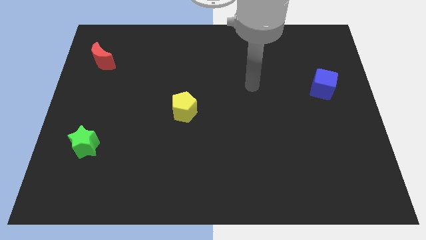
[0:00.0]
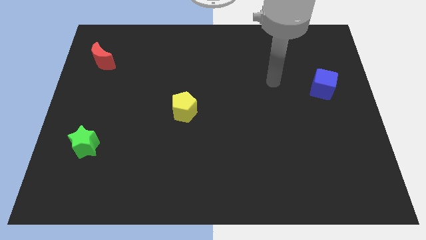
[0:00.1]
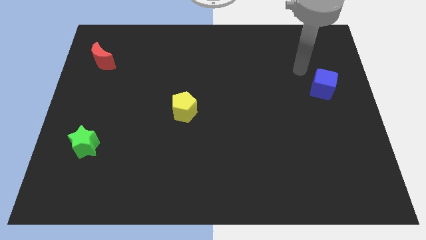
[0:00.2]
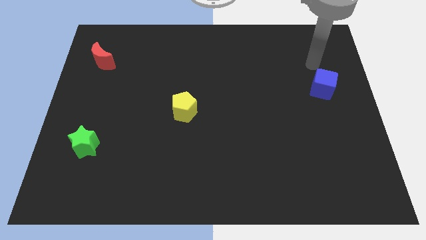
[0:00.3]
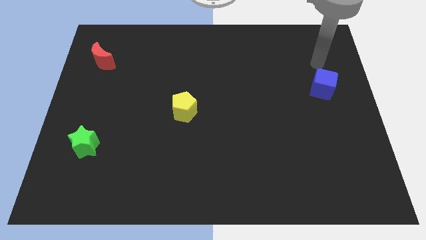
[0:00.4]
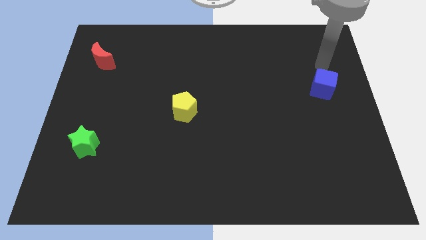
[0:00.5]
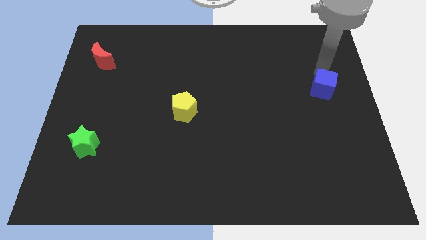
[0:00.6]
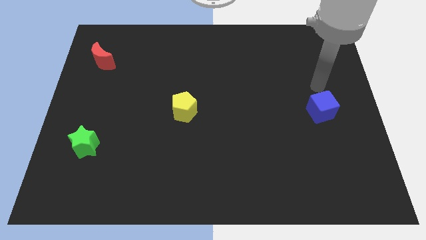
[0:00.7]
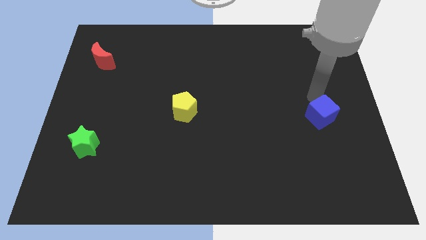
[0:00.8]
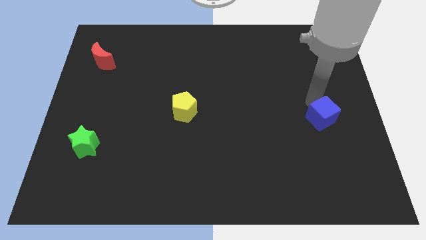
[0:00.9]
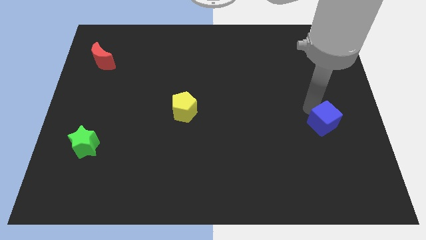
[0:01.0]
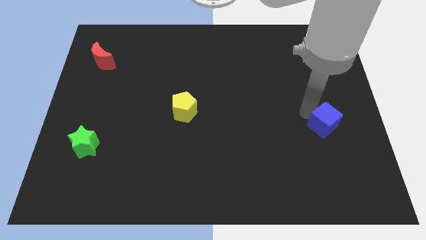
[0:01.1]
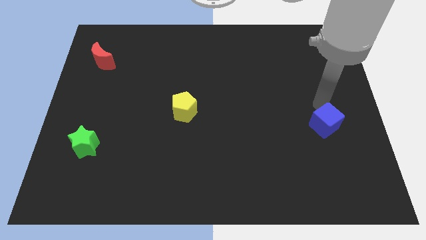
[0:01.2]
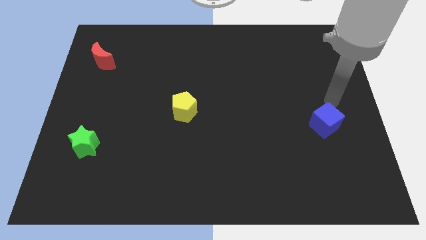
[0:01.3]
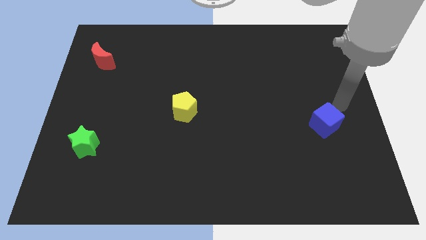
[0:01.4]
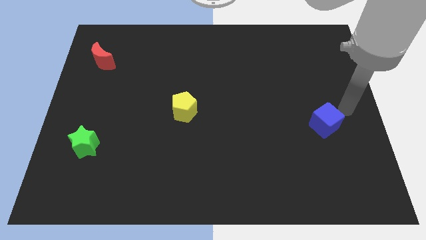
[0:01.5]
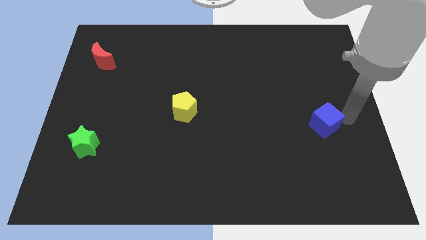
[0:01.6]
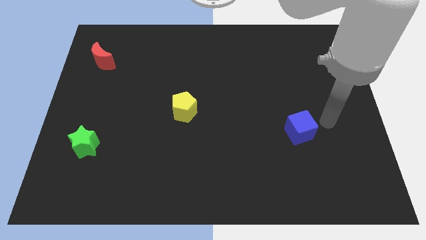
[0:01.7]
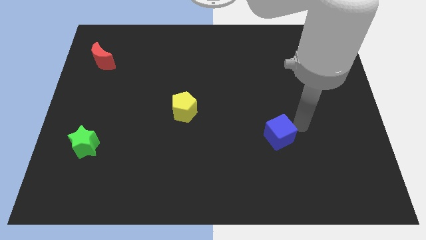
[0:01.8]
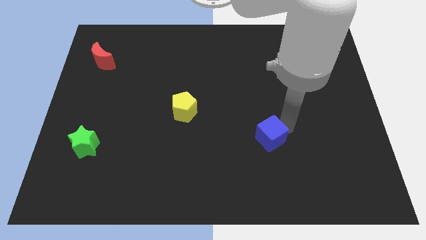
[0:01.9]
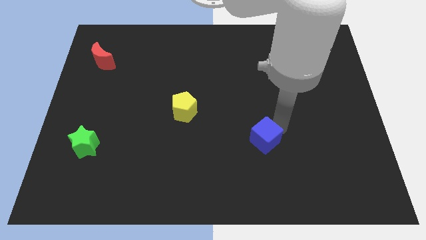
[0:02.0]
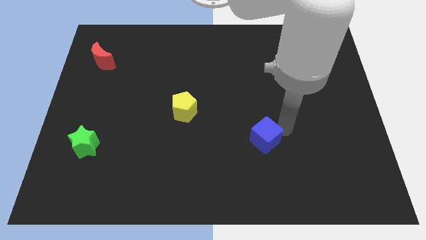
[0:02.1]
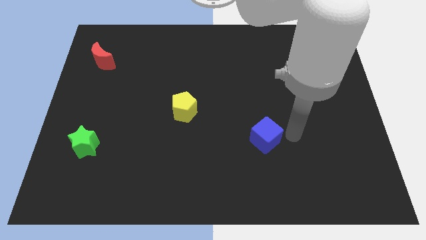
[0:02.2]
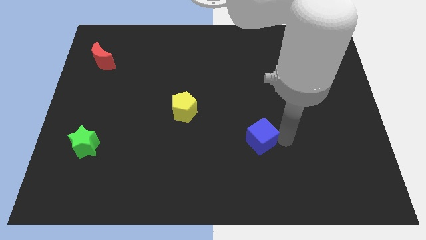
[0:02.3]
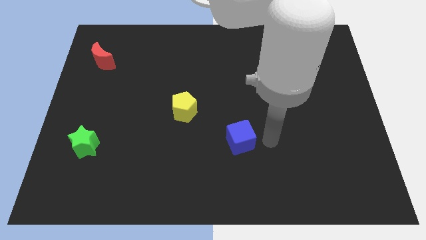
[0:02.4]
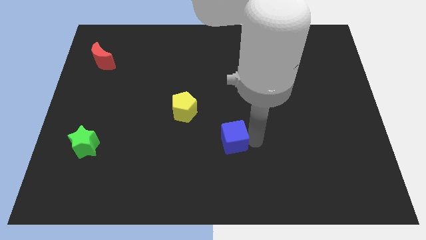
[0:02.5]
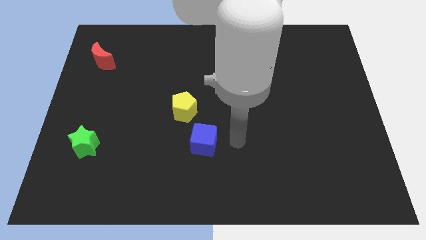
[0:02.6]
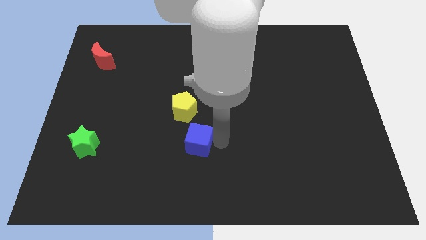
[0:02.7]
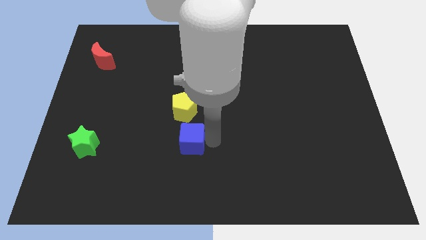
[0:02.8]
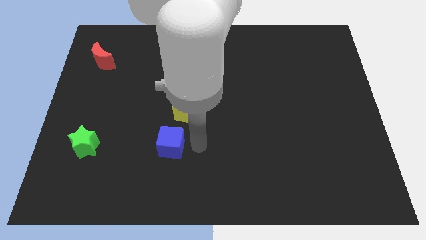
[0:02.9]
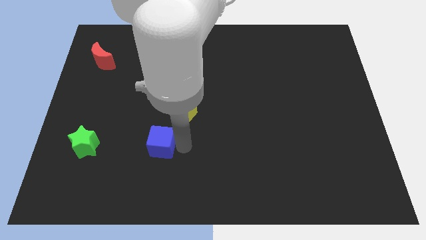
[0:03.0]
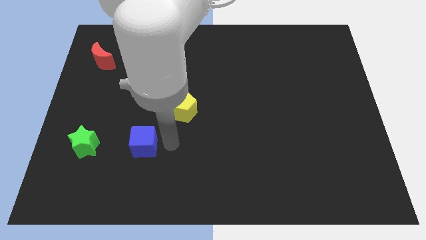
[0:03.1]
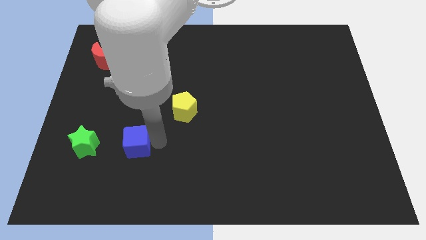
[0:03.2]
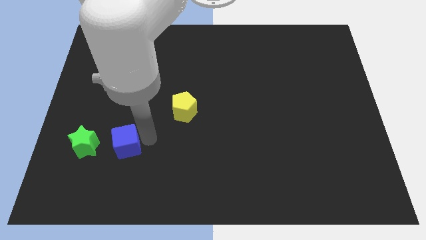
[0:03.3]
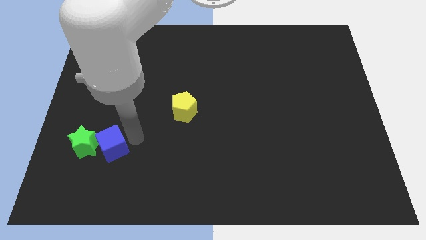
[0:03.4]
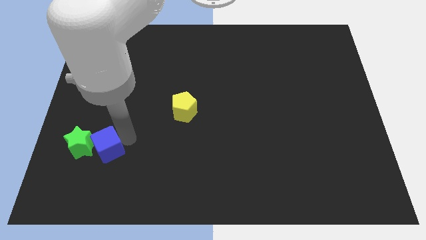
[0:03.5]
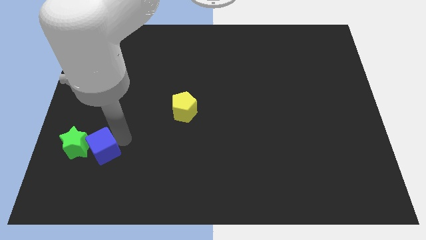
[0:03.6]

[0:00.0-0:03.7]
push the blue cube to the star

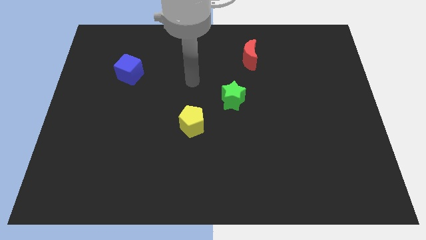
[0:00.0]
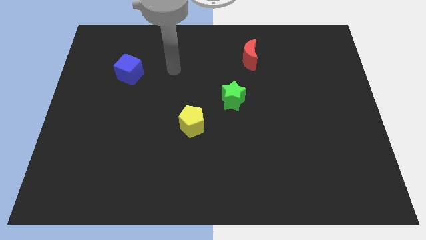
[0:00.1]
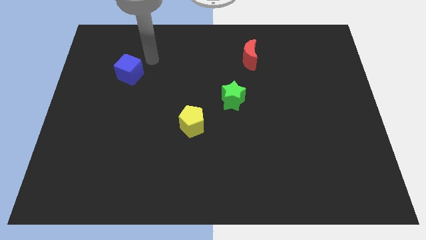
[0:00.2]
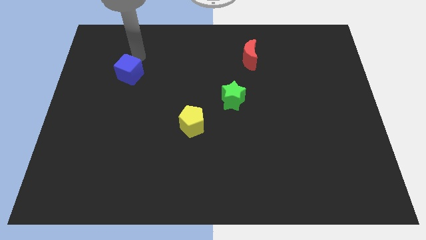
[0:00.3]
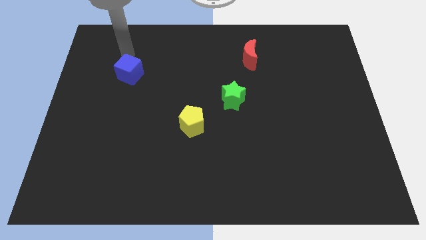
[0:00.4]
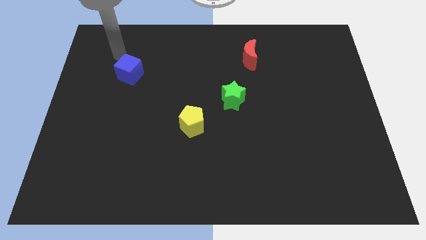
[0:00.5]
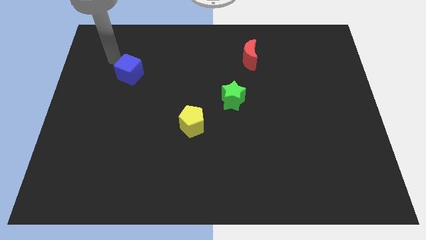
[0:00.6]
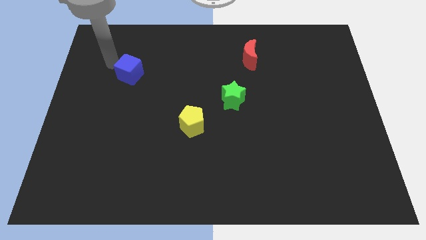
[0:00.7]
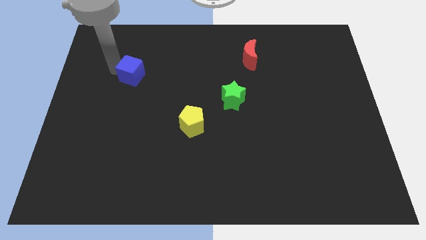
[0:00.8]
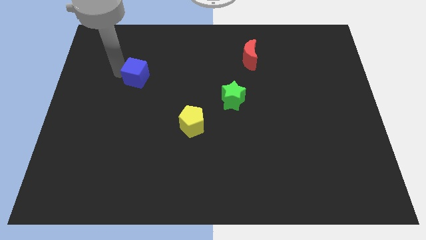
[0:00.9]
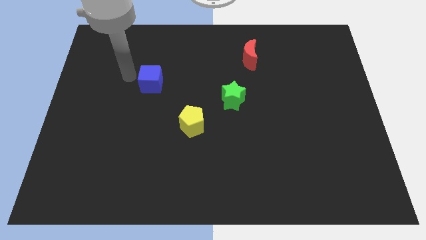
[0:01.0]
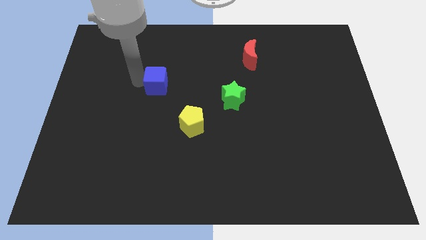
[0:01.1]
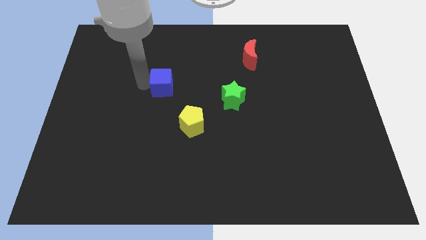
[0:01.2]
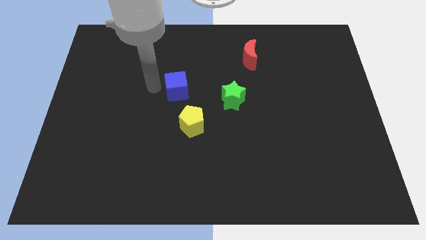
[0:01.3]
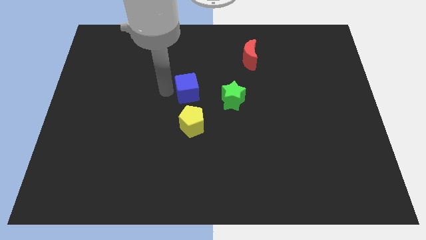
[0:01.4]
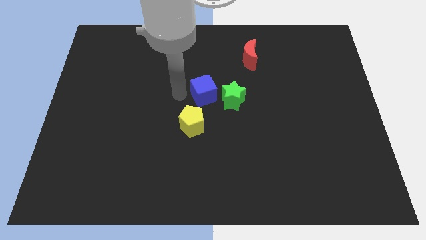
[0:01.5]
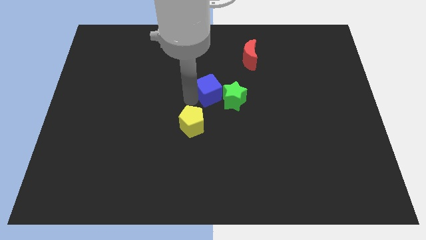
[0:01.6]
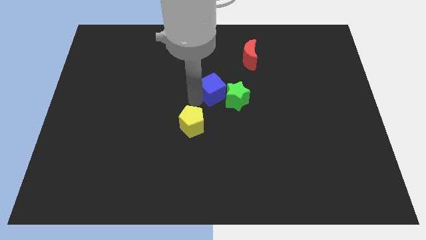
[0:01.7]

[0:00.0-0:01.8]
slide the blue block next to the star

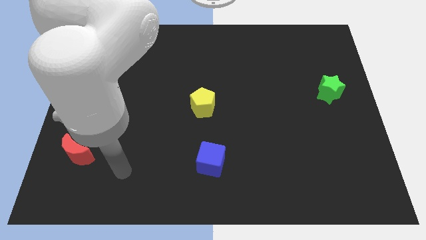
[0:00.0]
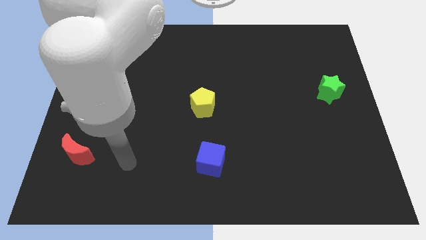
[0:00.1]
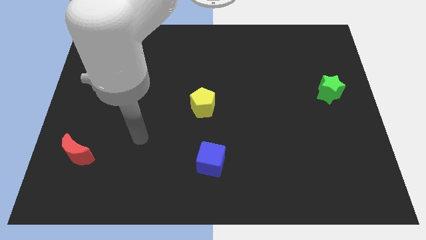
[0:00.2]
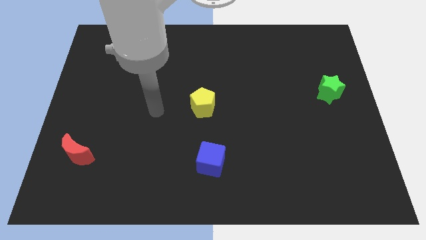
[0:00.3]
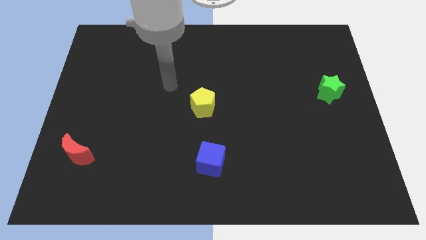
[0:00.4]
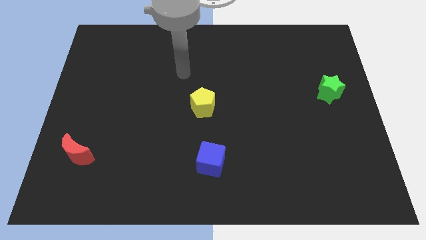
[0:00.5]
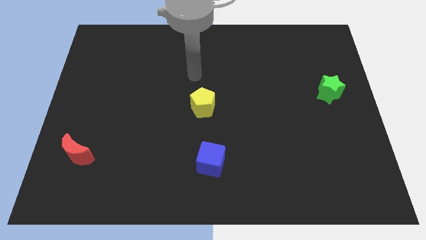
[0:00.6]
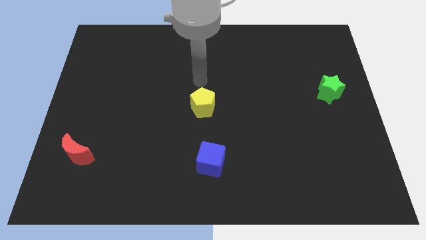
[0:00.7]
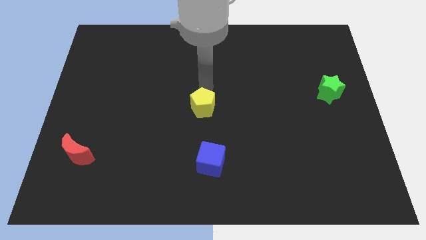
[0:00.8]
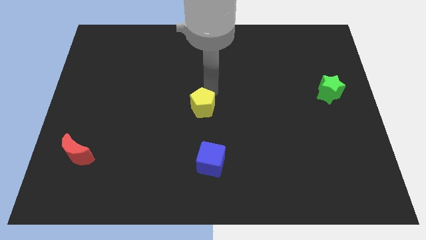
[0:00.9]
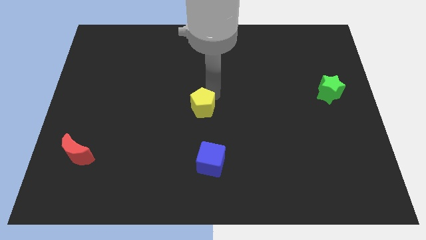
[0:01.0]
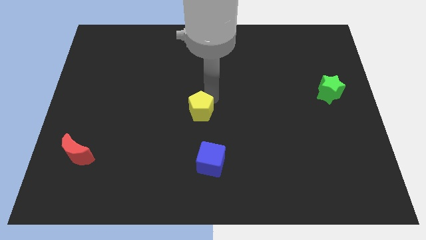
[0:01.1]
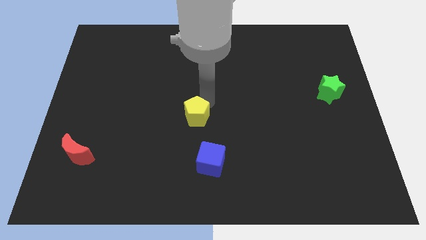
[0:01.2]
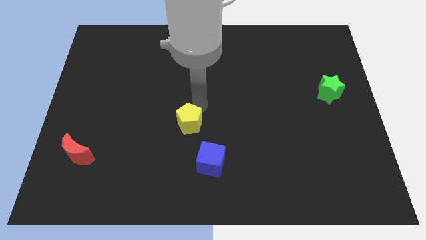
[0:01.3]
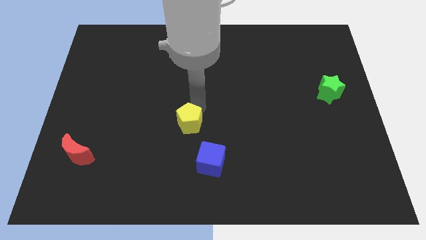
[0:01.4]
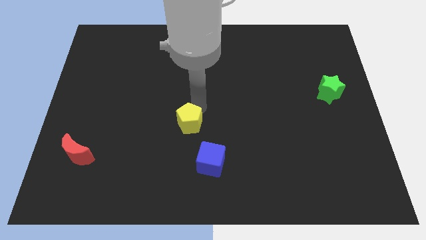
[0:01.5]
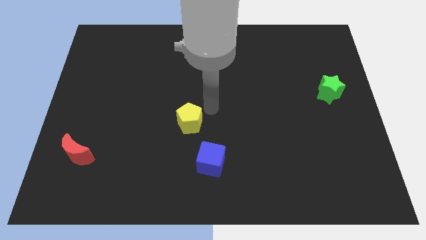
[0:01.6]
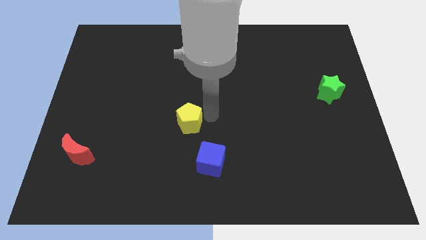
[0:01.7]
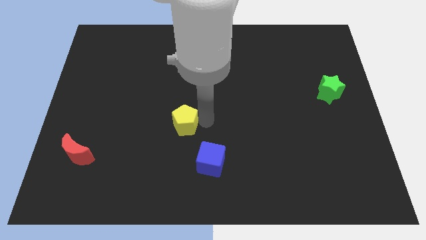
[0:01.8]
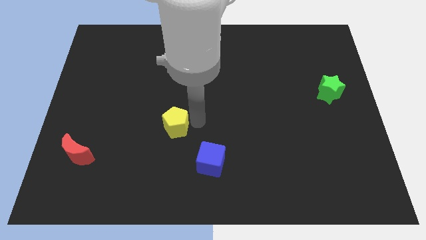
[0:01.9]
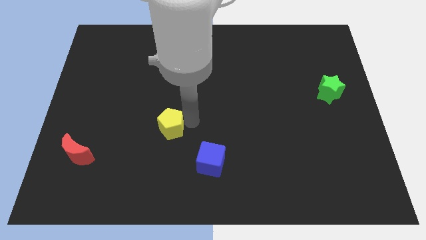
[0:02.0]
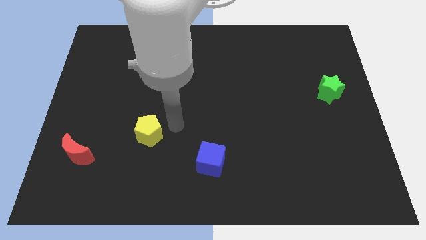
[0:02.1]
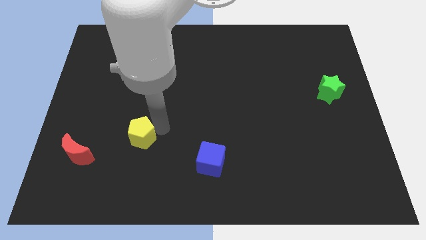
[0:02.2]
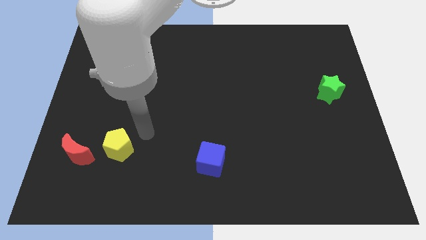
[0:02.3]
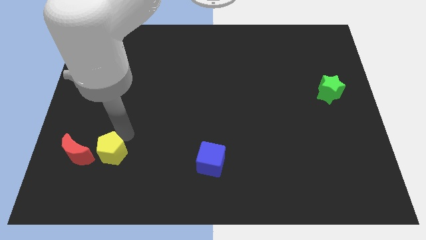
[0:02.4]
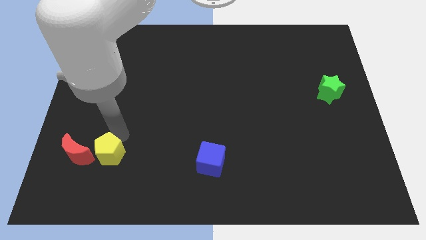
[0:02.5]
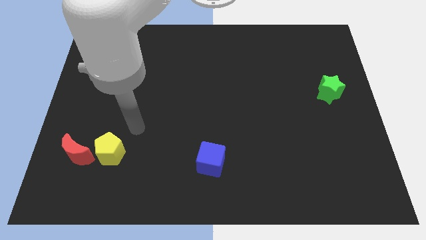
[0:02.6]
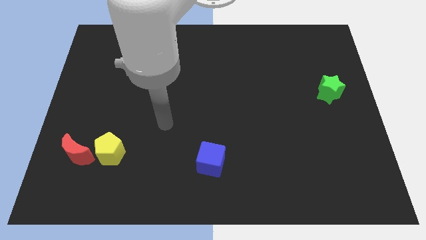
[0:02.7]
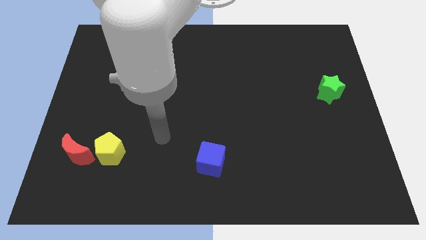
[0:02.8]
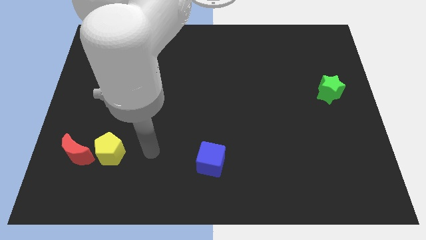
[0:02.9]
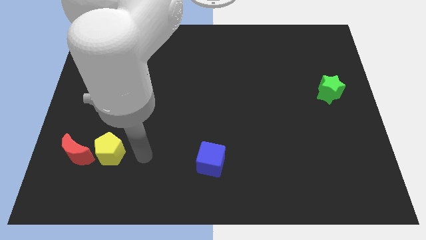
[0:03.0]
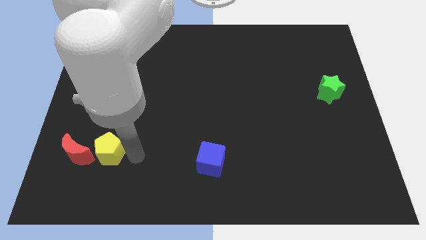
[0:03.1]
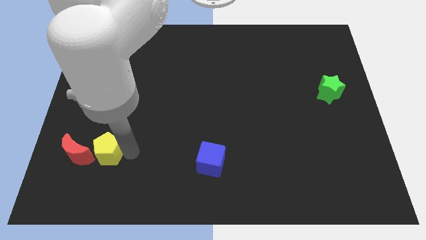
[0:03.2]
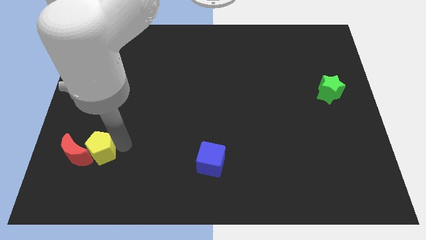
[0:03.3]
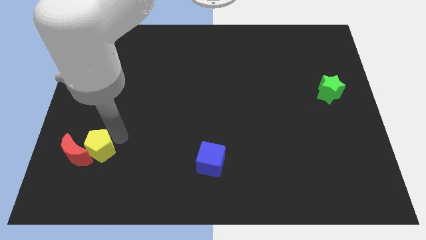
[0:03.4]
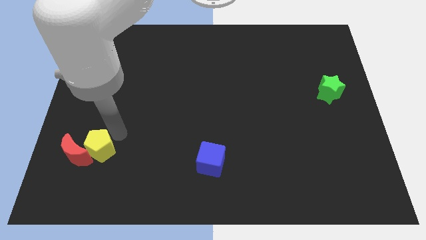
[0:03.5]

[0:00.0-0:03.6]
push the yellow block towards the red block
